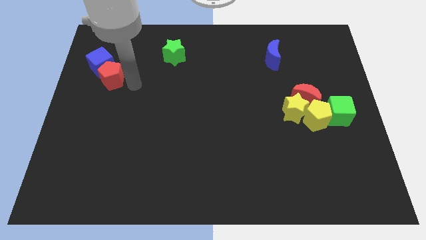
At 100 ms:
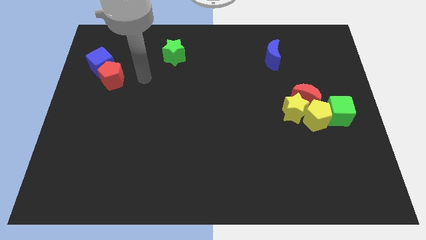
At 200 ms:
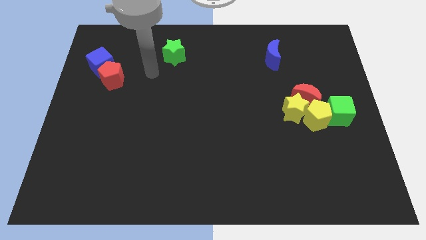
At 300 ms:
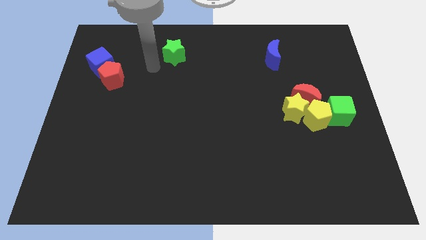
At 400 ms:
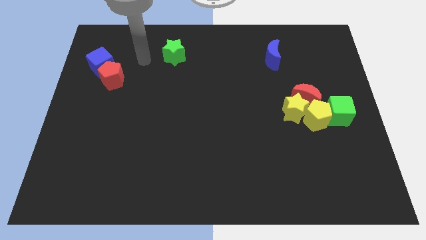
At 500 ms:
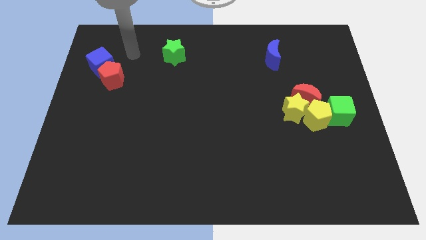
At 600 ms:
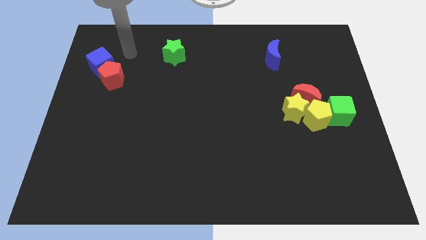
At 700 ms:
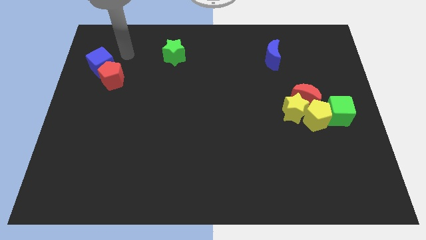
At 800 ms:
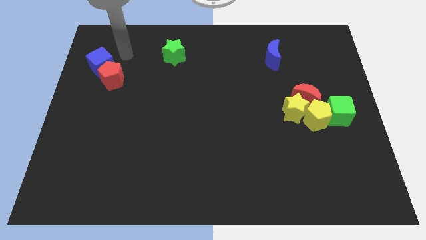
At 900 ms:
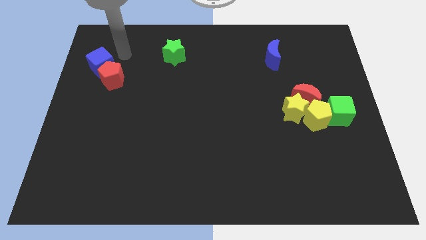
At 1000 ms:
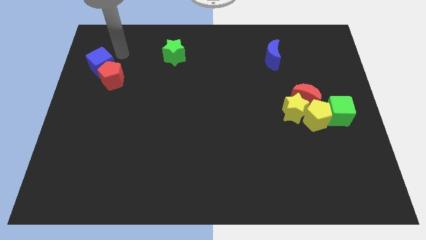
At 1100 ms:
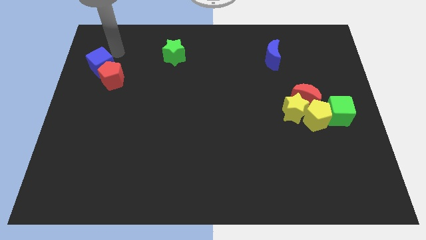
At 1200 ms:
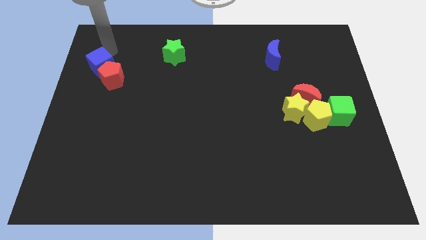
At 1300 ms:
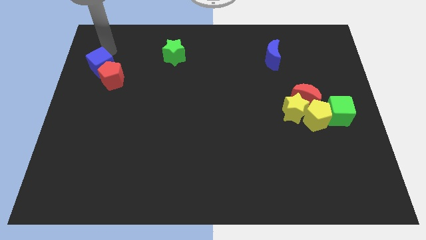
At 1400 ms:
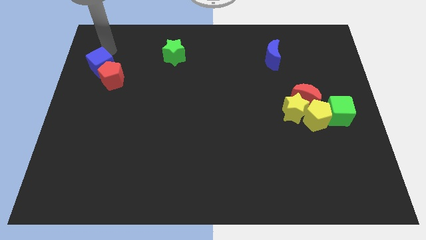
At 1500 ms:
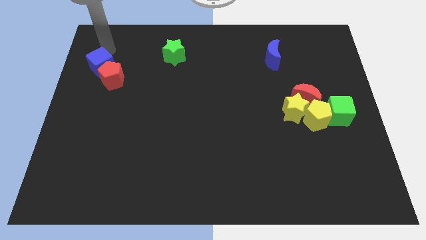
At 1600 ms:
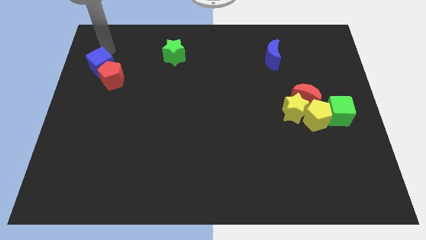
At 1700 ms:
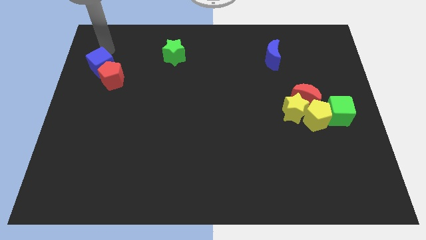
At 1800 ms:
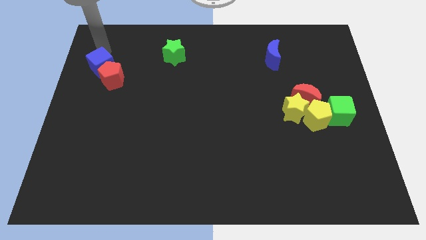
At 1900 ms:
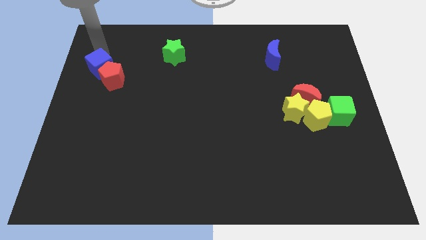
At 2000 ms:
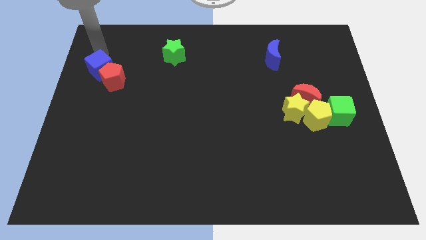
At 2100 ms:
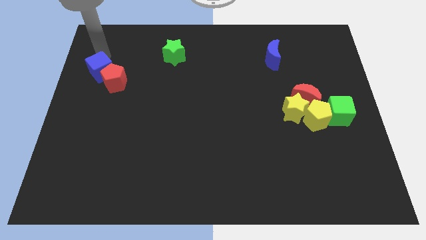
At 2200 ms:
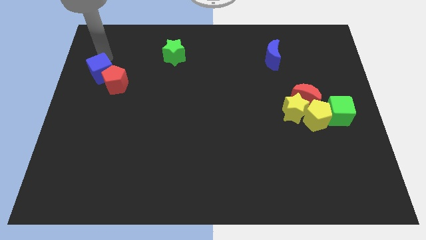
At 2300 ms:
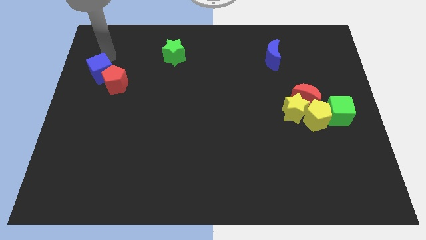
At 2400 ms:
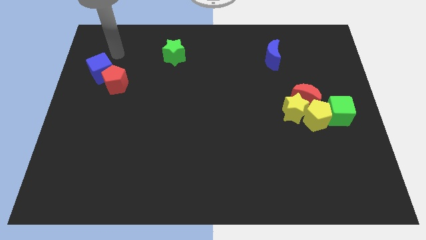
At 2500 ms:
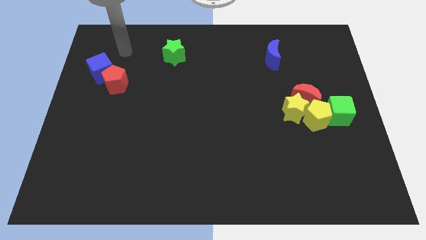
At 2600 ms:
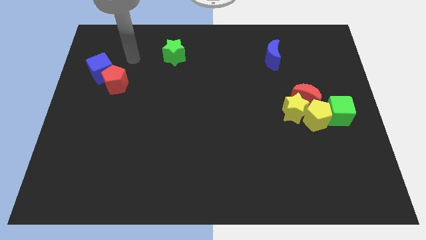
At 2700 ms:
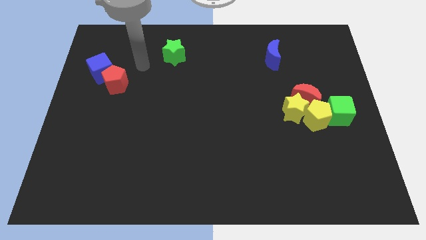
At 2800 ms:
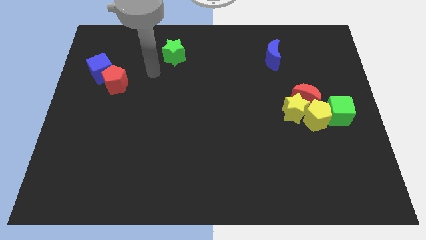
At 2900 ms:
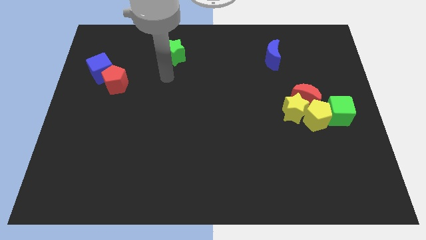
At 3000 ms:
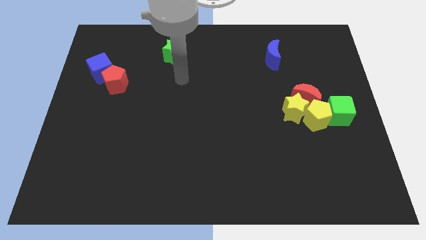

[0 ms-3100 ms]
slightly push the blue cube into the red pentagon

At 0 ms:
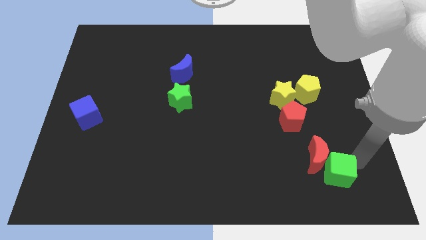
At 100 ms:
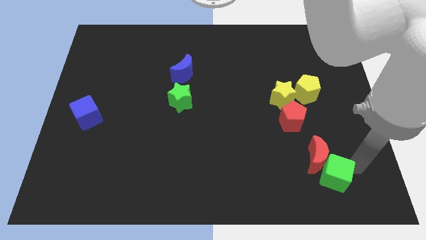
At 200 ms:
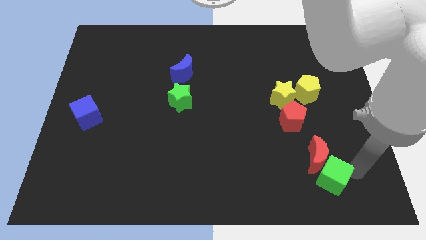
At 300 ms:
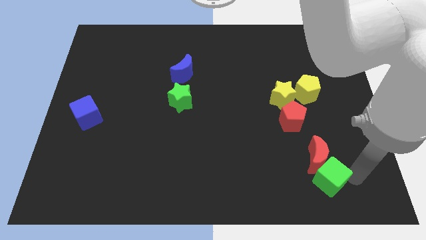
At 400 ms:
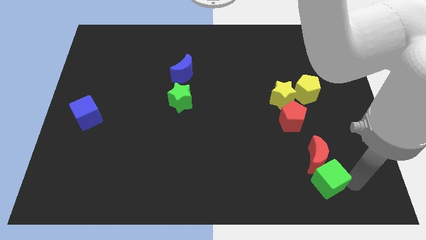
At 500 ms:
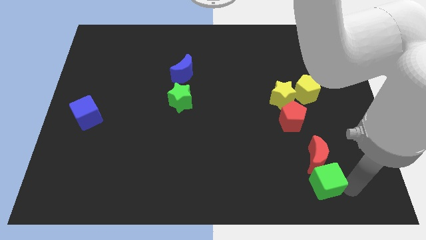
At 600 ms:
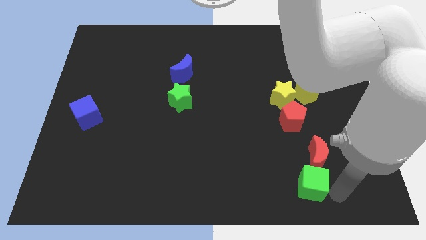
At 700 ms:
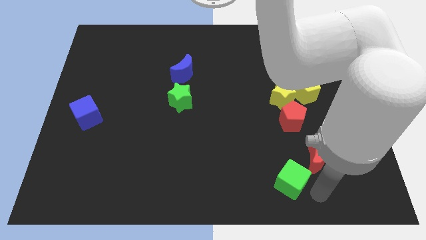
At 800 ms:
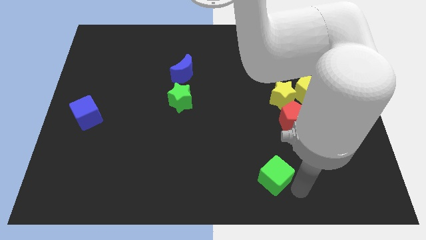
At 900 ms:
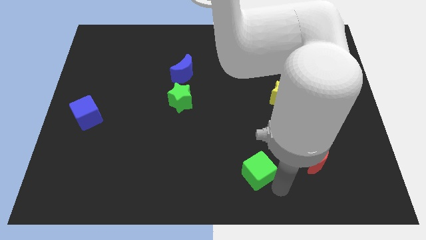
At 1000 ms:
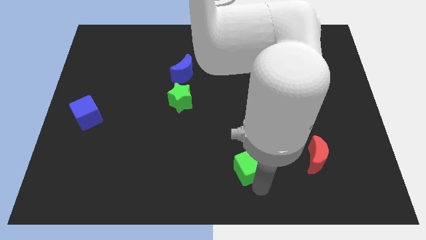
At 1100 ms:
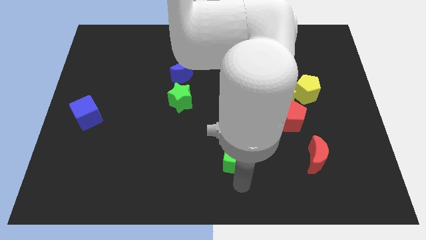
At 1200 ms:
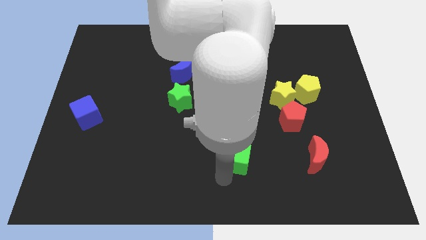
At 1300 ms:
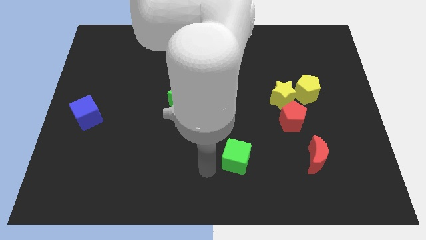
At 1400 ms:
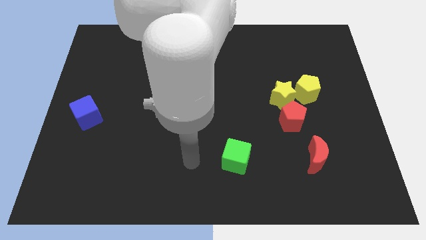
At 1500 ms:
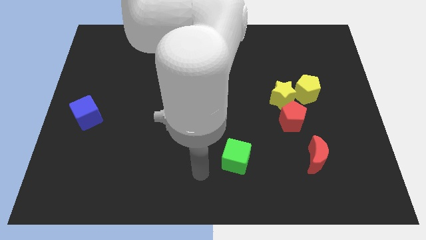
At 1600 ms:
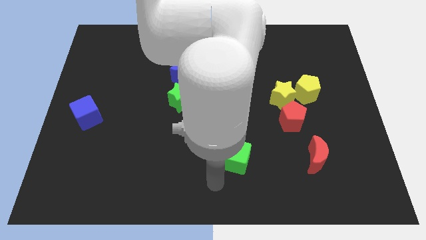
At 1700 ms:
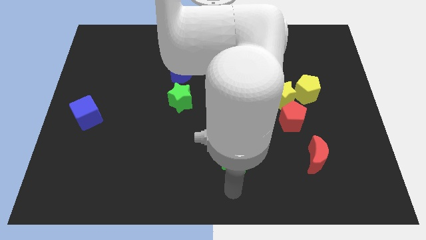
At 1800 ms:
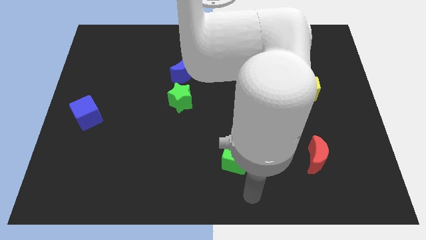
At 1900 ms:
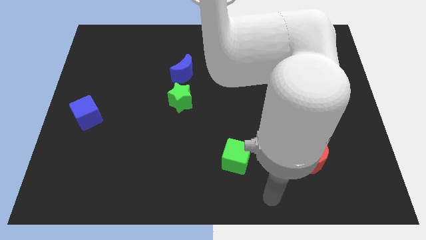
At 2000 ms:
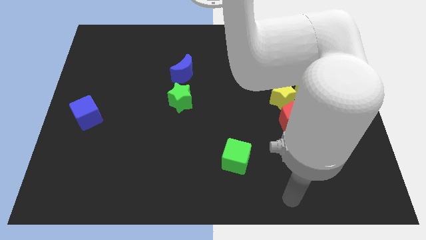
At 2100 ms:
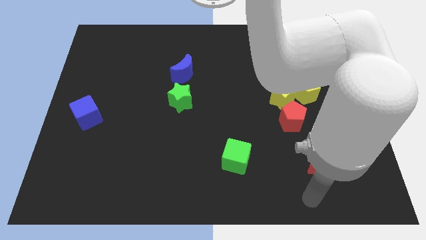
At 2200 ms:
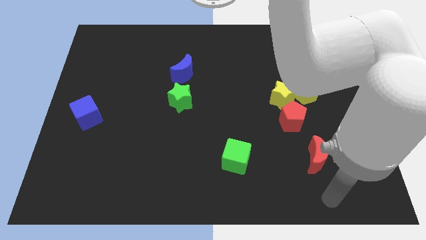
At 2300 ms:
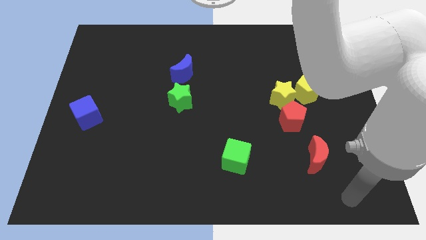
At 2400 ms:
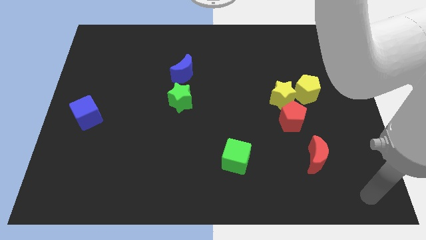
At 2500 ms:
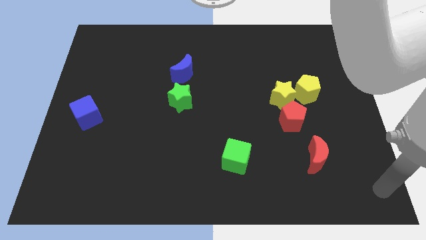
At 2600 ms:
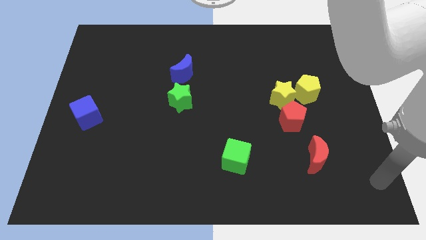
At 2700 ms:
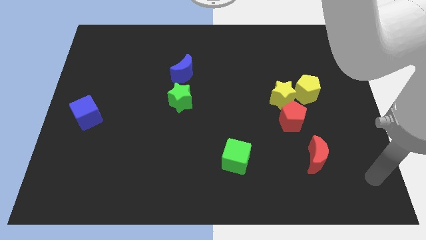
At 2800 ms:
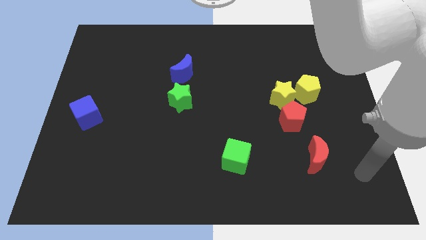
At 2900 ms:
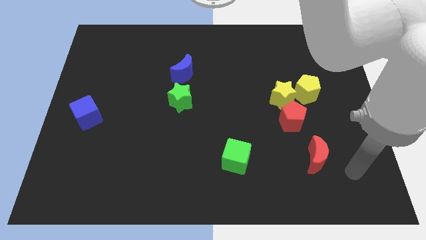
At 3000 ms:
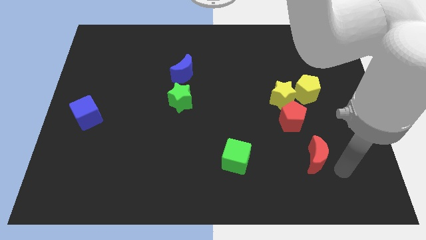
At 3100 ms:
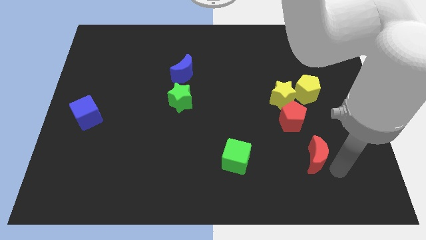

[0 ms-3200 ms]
push the green cube to the left side of the red crescent

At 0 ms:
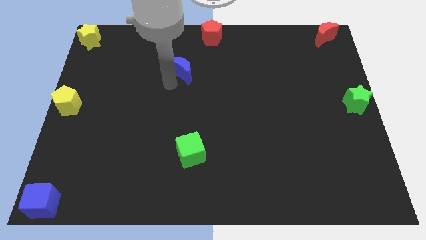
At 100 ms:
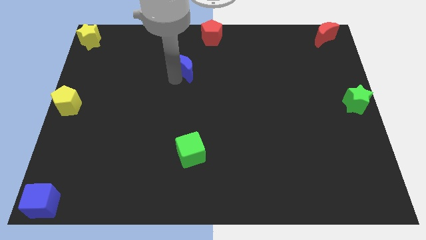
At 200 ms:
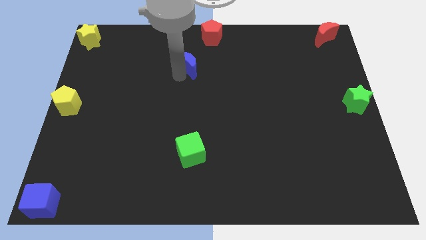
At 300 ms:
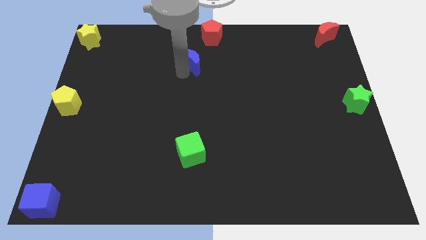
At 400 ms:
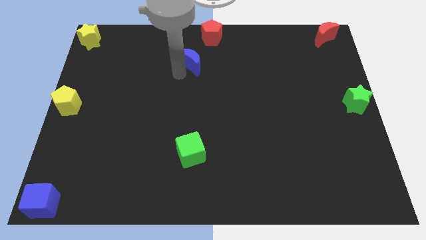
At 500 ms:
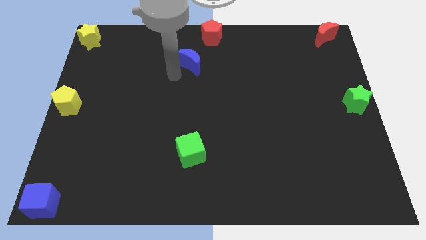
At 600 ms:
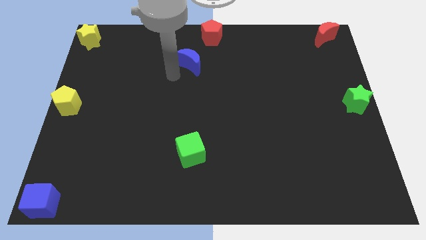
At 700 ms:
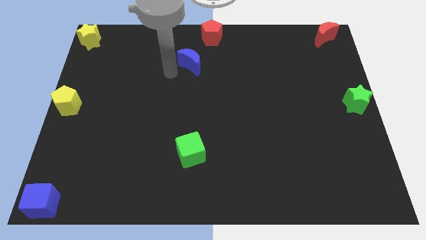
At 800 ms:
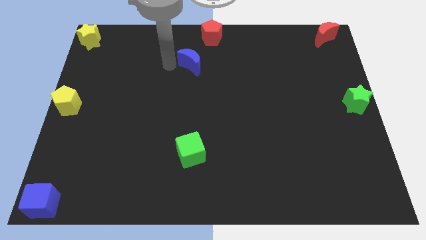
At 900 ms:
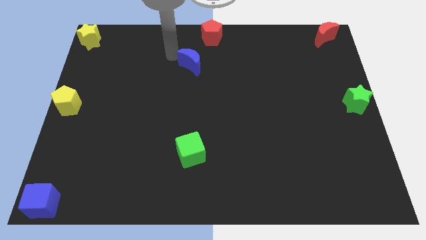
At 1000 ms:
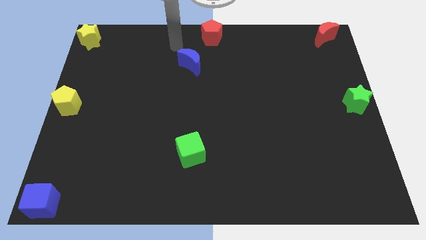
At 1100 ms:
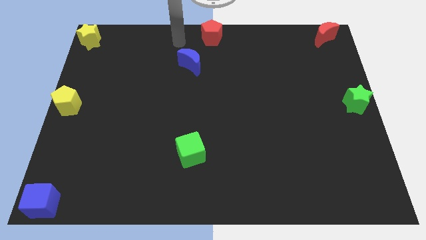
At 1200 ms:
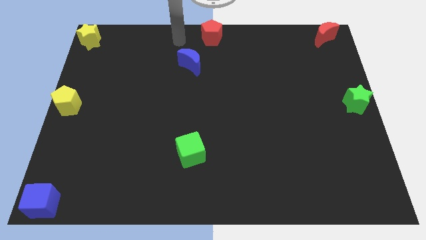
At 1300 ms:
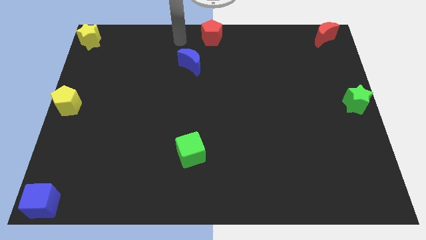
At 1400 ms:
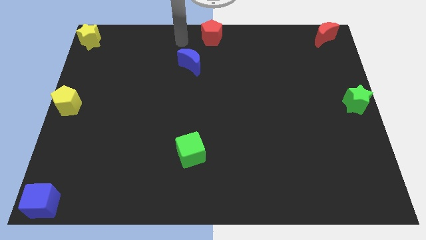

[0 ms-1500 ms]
move the blue crescent slightly up

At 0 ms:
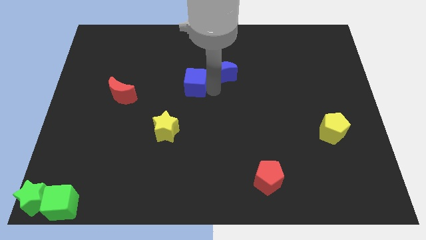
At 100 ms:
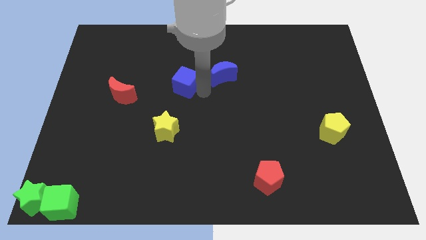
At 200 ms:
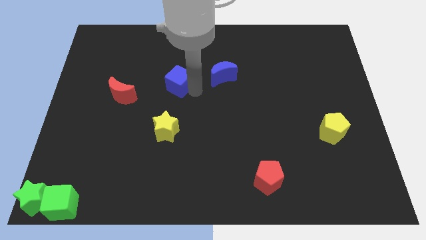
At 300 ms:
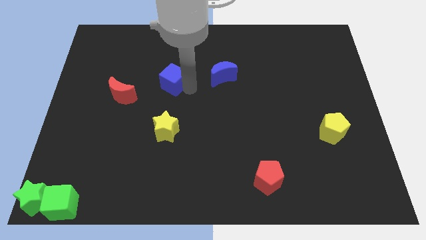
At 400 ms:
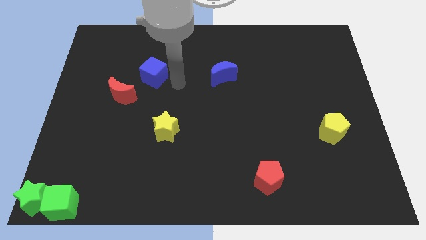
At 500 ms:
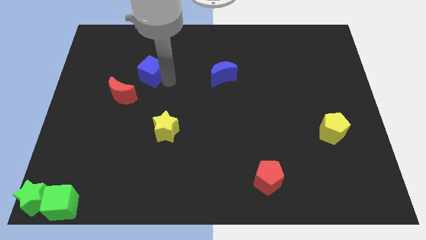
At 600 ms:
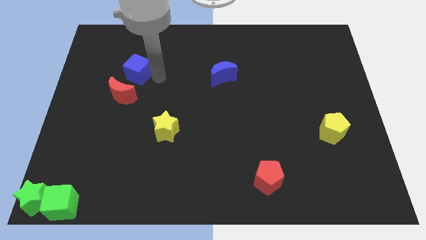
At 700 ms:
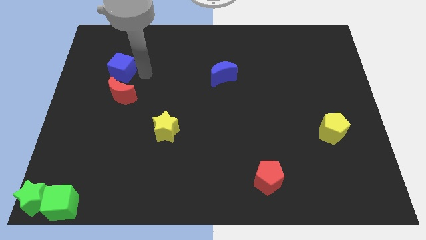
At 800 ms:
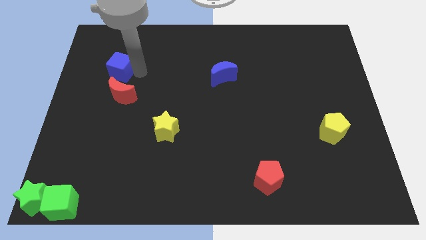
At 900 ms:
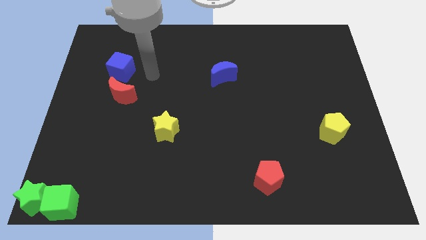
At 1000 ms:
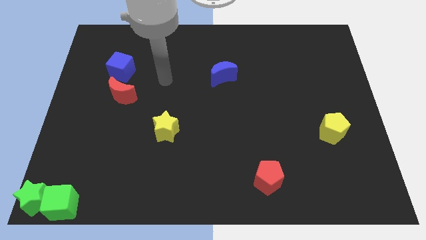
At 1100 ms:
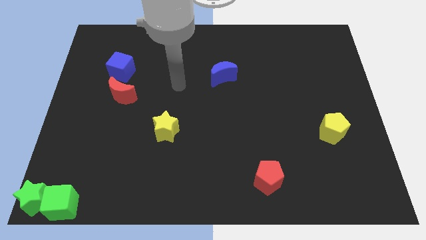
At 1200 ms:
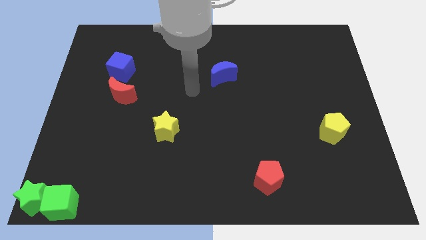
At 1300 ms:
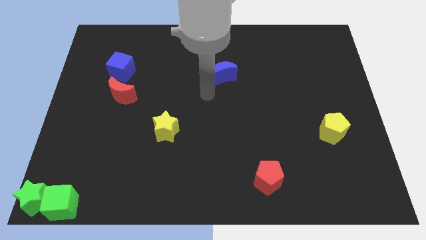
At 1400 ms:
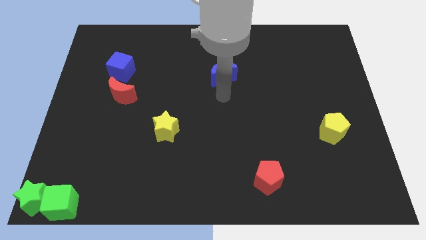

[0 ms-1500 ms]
separate the blue cube from the blue moon
